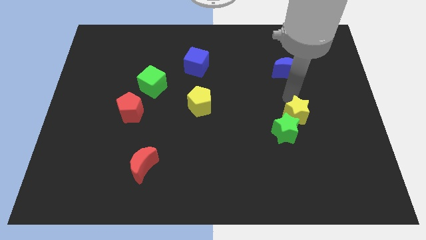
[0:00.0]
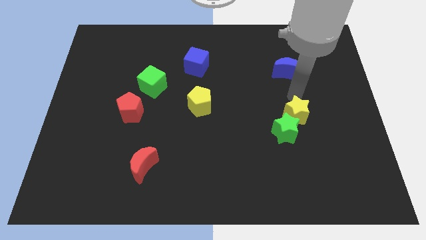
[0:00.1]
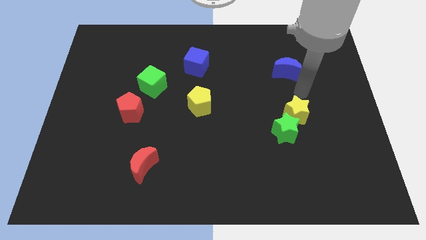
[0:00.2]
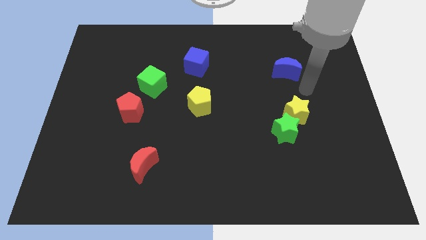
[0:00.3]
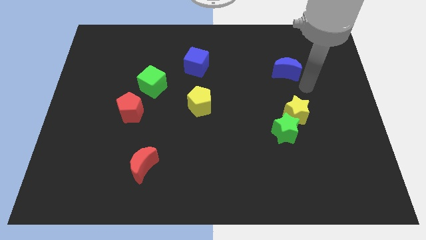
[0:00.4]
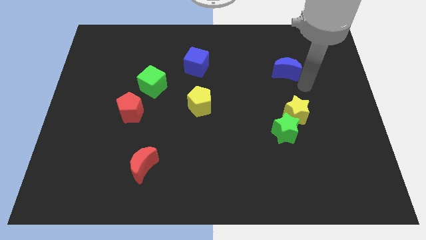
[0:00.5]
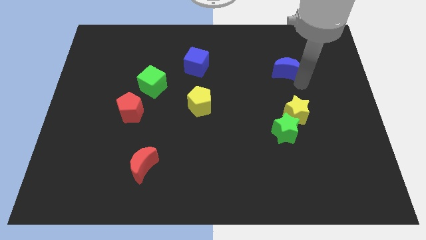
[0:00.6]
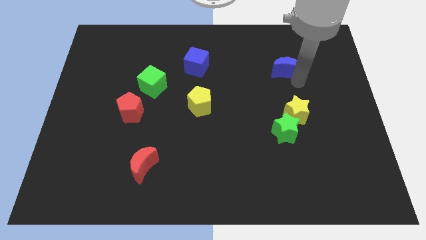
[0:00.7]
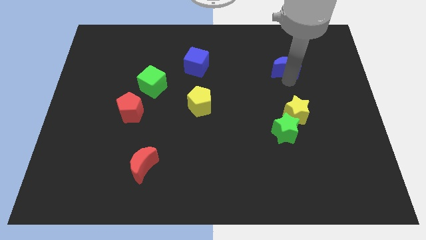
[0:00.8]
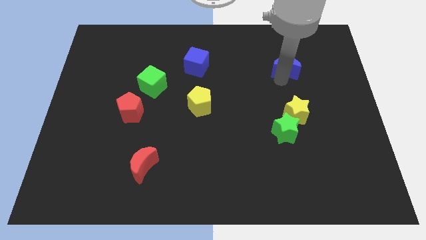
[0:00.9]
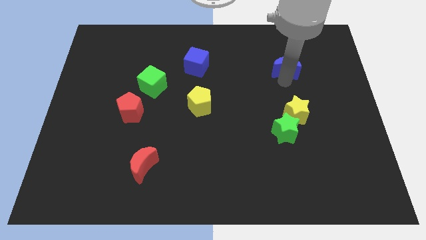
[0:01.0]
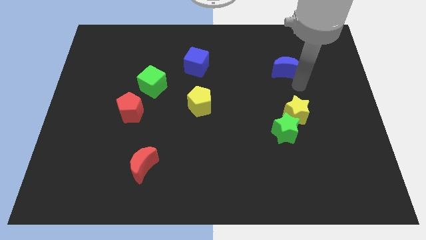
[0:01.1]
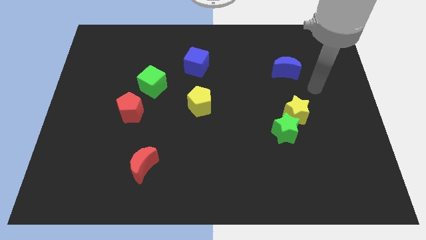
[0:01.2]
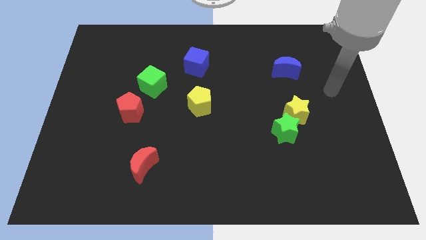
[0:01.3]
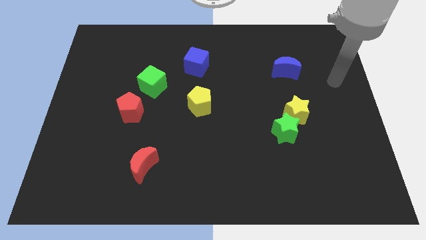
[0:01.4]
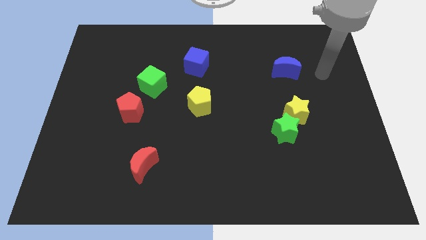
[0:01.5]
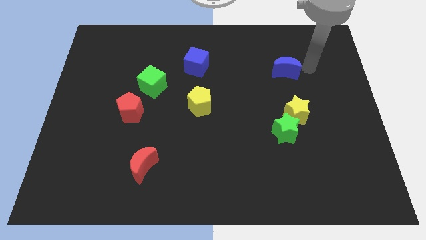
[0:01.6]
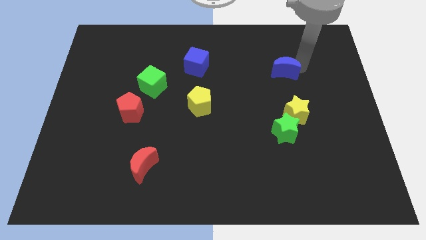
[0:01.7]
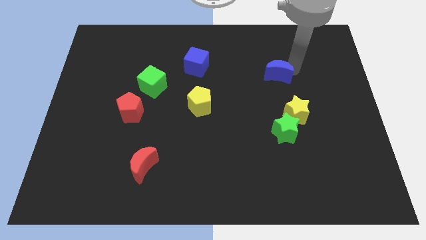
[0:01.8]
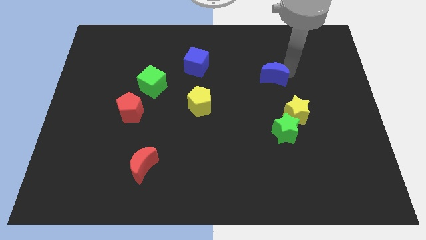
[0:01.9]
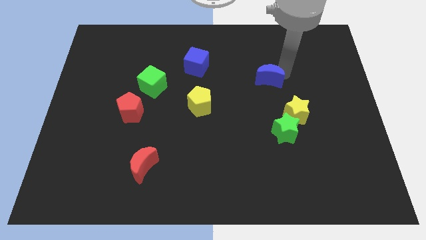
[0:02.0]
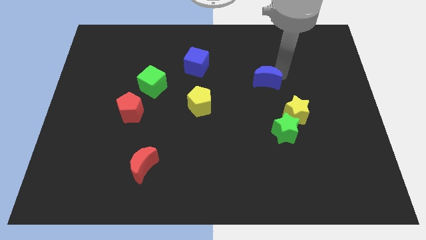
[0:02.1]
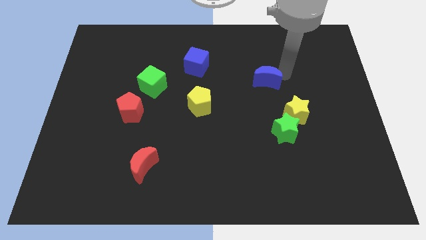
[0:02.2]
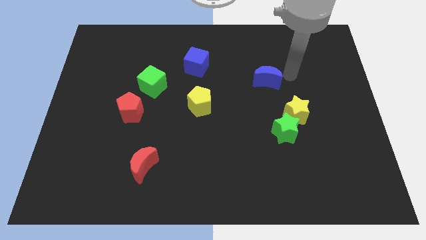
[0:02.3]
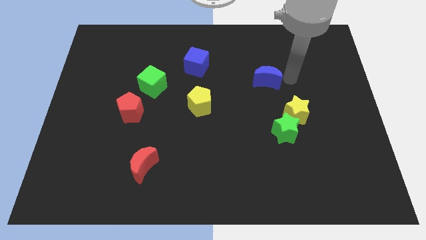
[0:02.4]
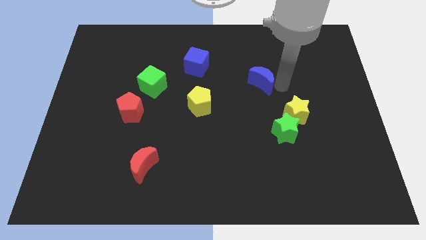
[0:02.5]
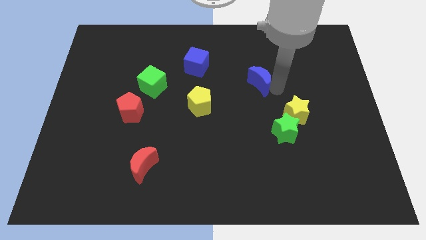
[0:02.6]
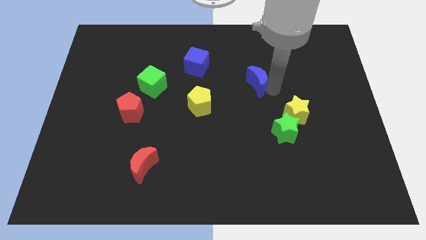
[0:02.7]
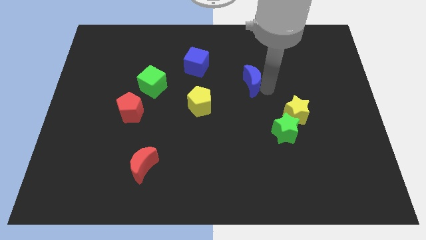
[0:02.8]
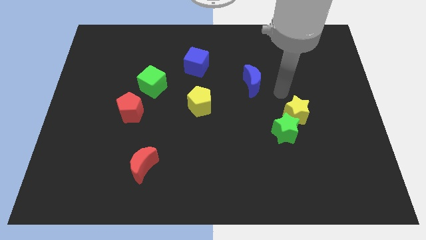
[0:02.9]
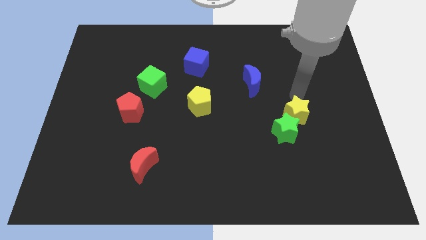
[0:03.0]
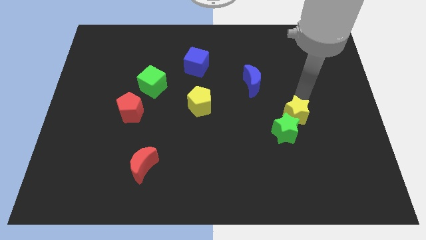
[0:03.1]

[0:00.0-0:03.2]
push the blue moon slightly towards the left side

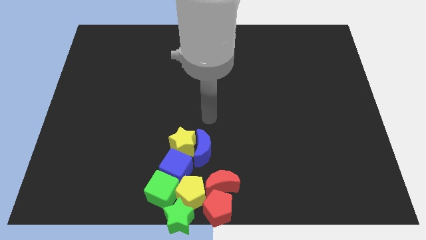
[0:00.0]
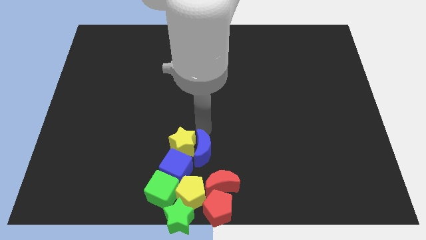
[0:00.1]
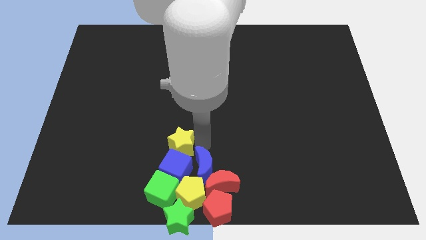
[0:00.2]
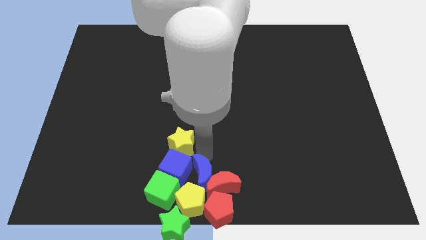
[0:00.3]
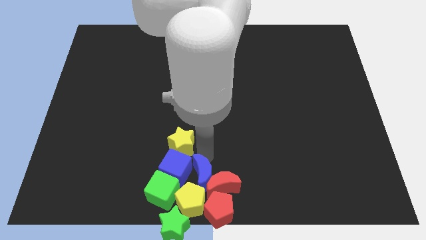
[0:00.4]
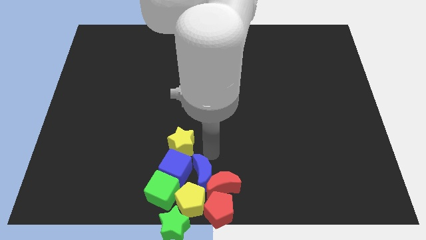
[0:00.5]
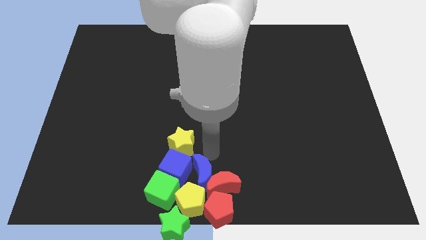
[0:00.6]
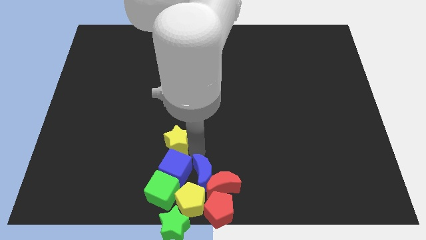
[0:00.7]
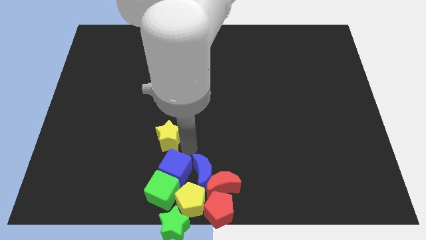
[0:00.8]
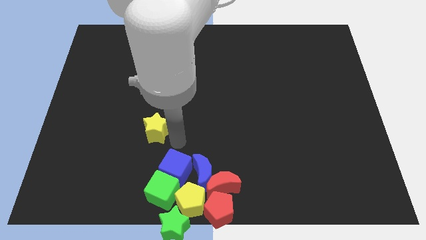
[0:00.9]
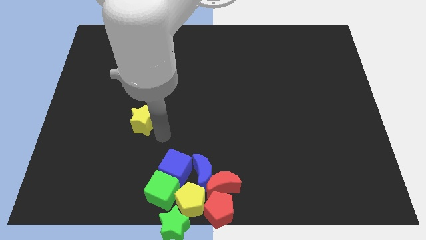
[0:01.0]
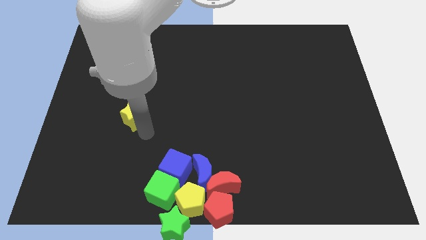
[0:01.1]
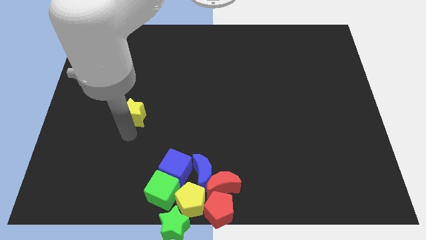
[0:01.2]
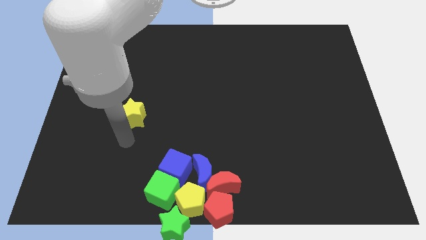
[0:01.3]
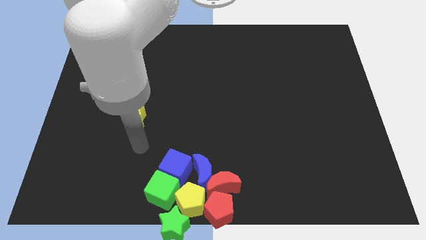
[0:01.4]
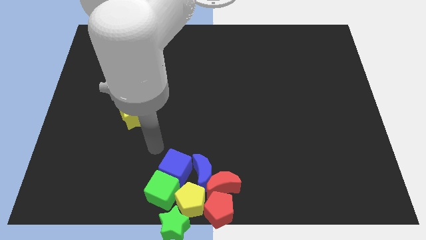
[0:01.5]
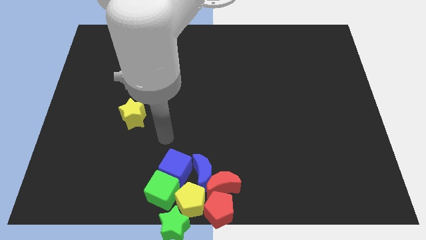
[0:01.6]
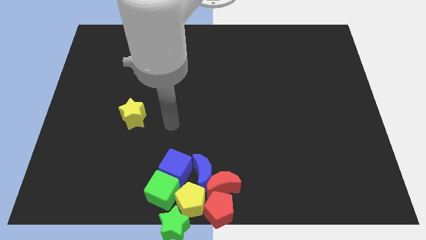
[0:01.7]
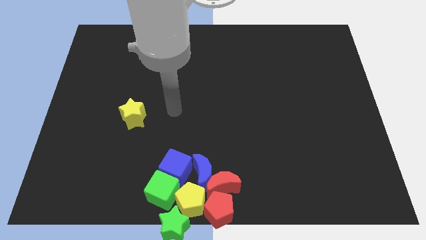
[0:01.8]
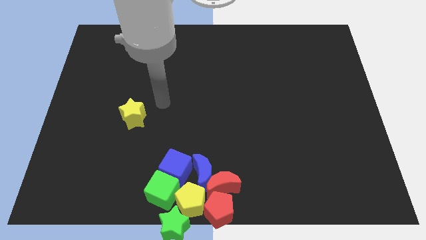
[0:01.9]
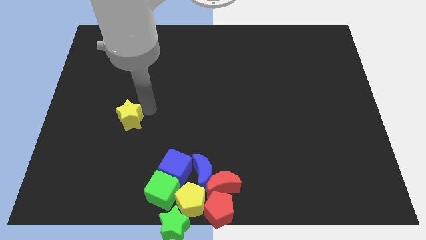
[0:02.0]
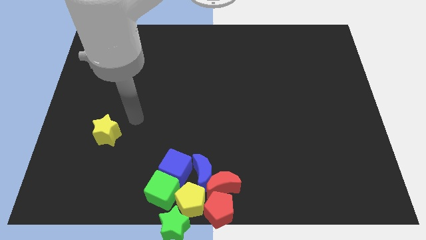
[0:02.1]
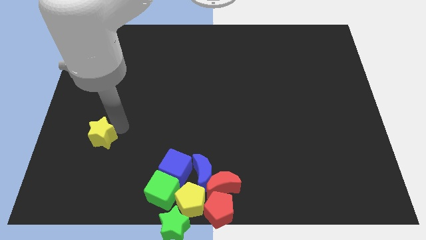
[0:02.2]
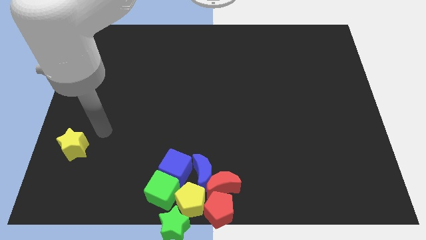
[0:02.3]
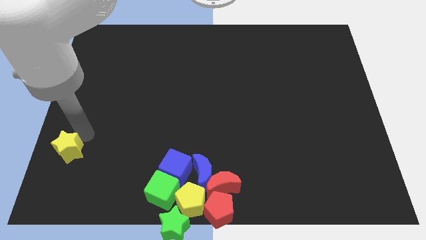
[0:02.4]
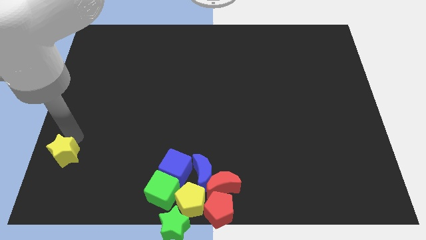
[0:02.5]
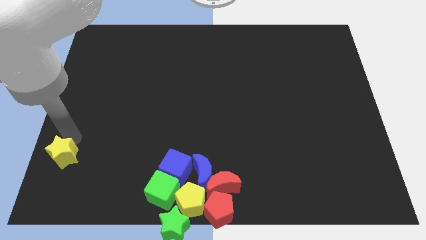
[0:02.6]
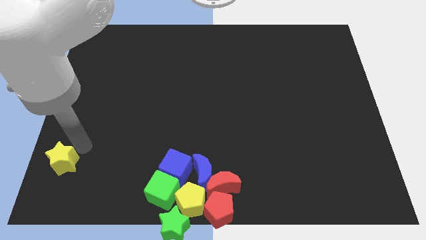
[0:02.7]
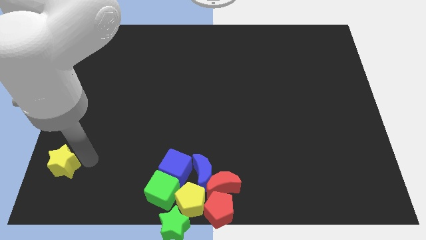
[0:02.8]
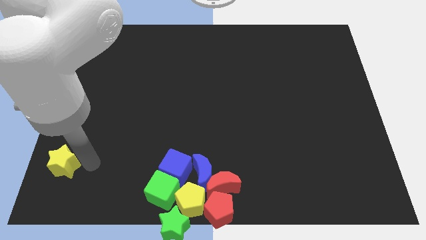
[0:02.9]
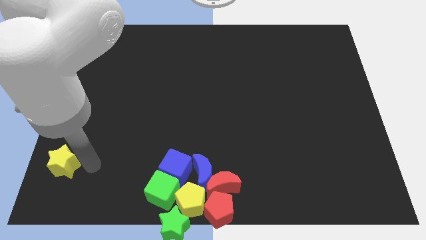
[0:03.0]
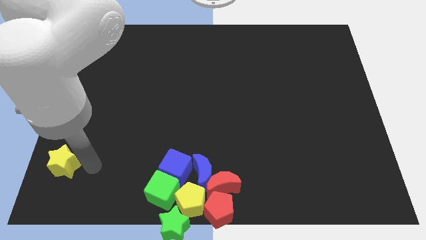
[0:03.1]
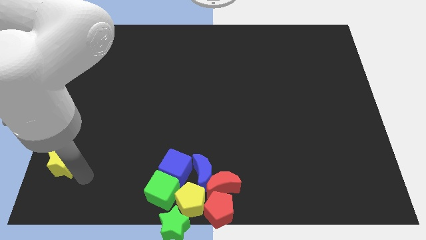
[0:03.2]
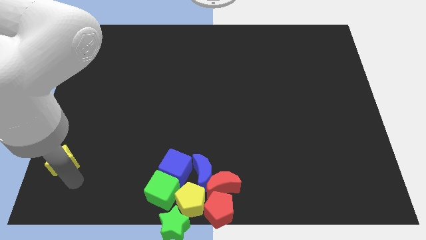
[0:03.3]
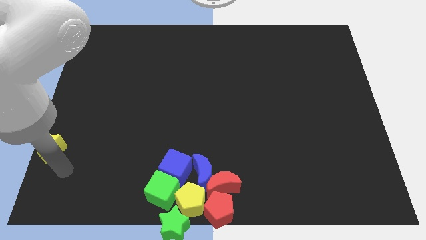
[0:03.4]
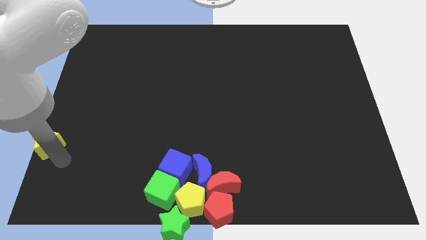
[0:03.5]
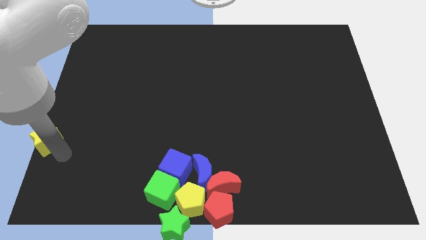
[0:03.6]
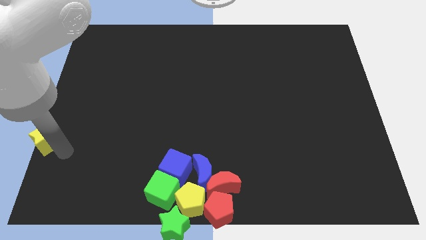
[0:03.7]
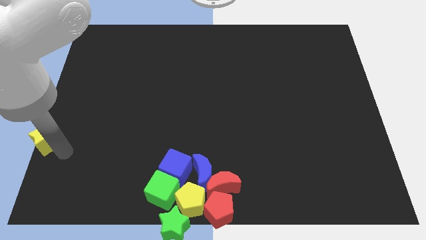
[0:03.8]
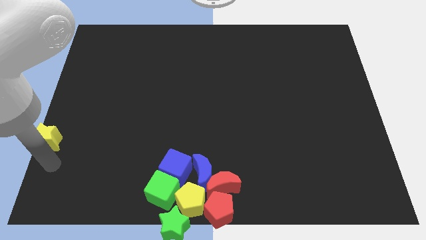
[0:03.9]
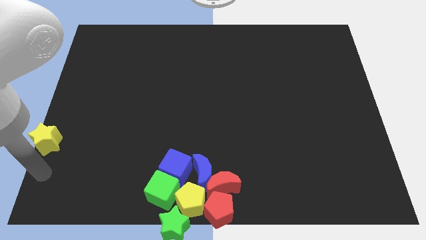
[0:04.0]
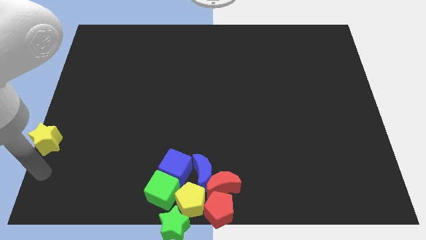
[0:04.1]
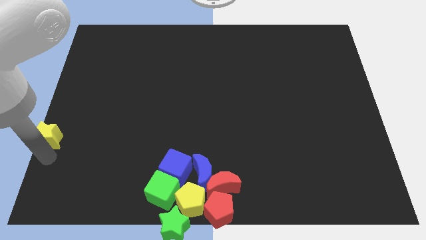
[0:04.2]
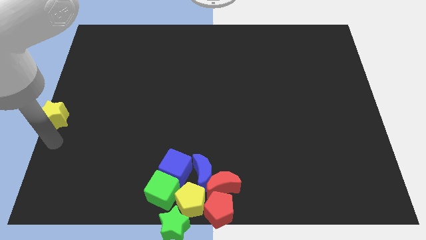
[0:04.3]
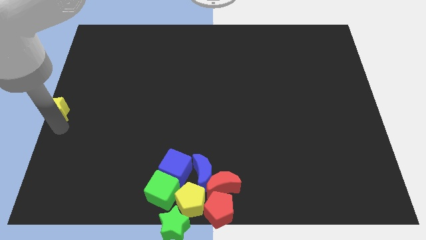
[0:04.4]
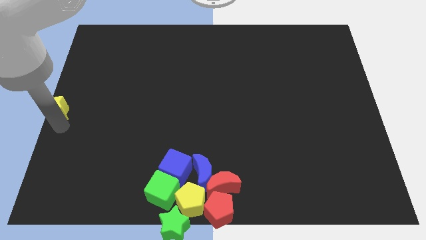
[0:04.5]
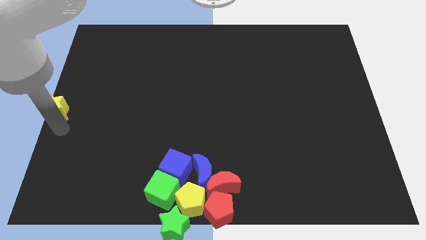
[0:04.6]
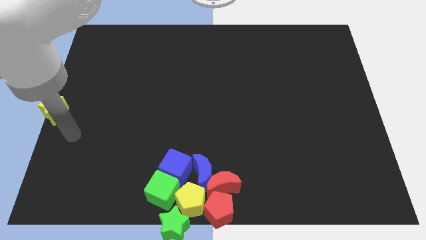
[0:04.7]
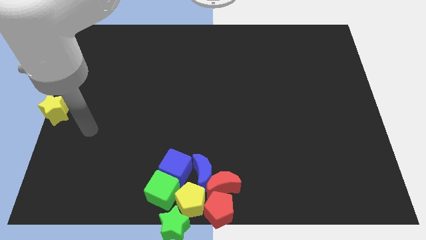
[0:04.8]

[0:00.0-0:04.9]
move the yellow star to the center left corner of the board

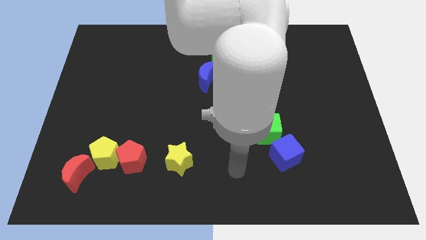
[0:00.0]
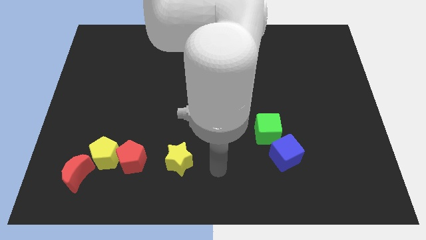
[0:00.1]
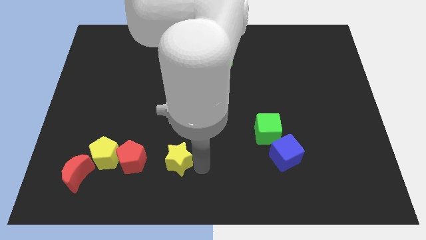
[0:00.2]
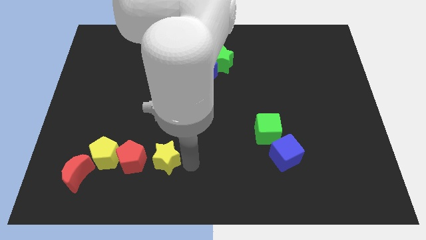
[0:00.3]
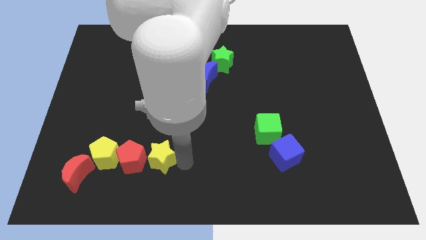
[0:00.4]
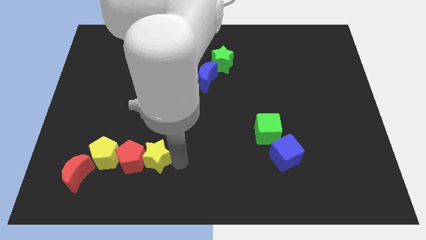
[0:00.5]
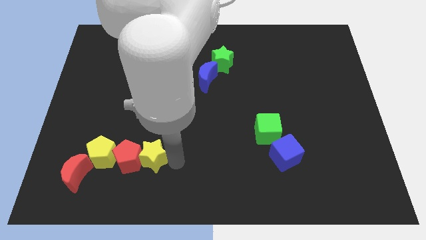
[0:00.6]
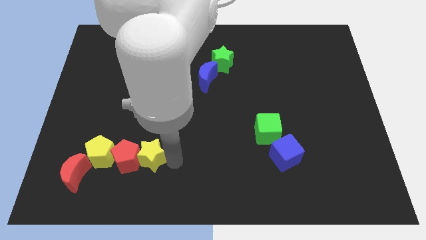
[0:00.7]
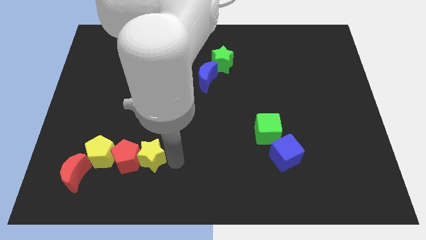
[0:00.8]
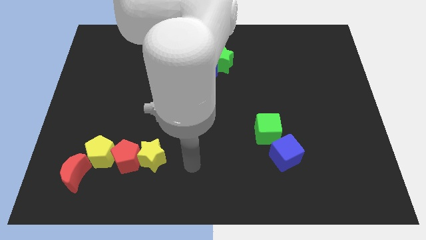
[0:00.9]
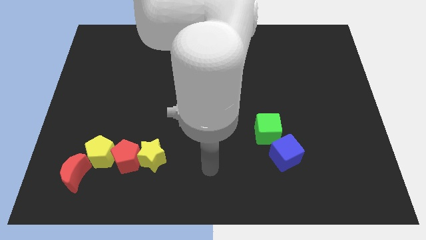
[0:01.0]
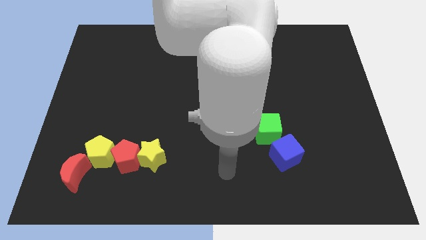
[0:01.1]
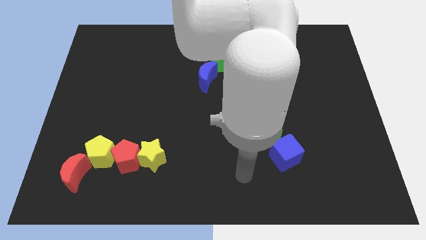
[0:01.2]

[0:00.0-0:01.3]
push yellow star into red pentagon
